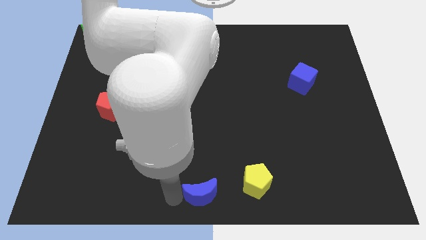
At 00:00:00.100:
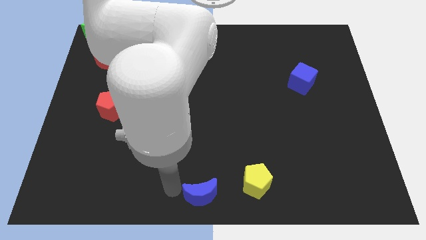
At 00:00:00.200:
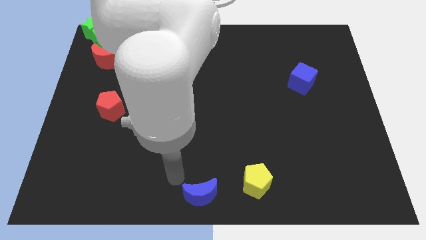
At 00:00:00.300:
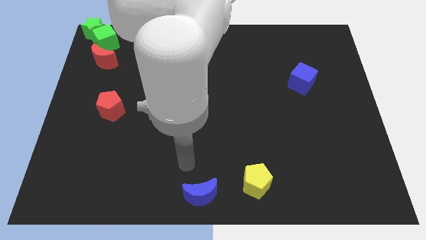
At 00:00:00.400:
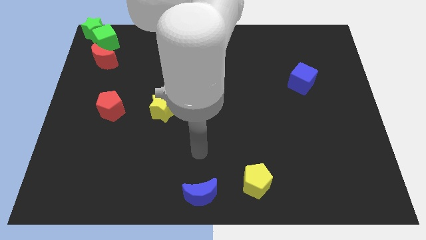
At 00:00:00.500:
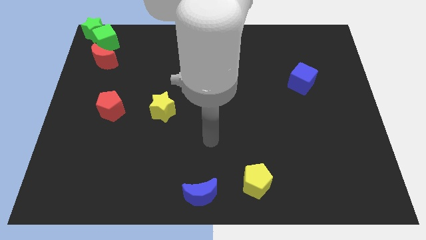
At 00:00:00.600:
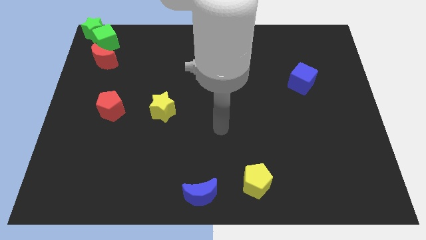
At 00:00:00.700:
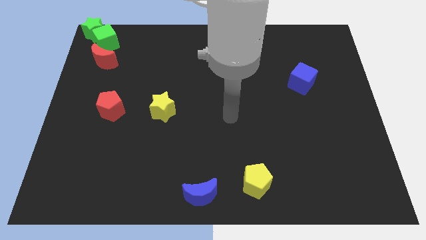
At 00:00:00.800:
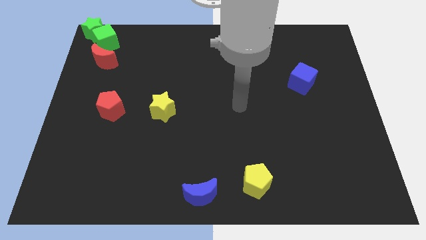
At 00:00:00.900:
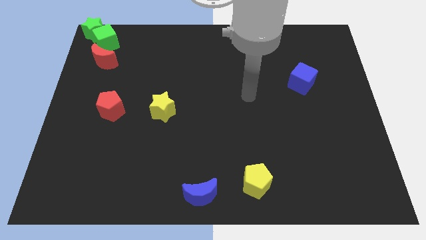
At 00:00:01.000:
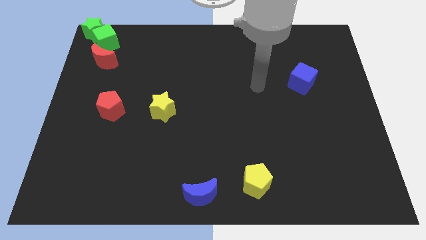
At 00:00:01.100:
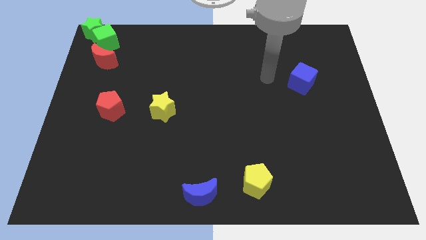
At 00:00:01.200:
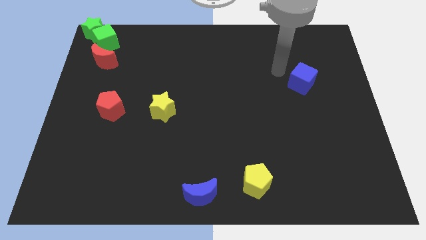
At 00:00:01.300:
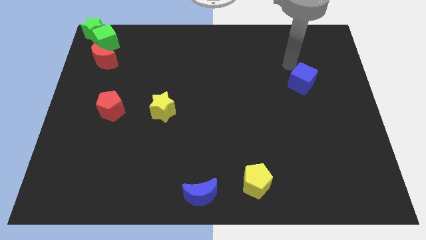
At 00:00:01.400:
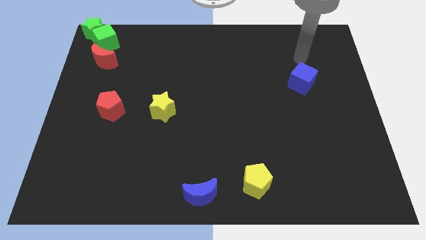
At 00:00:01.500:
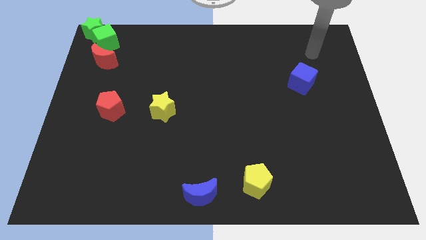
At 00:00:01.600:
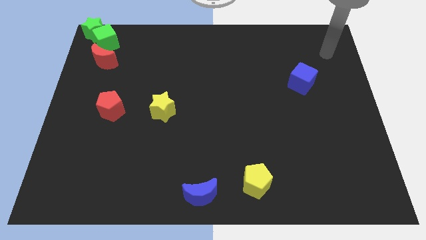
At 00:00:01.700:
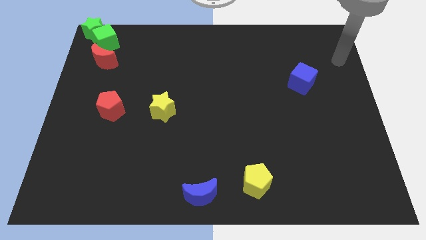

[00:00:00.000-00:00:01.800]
move your arm to the top right

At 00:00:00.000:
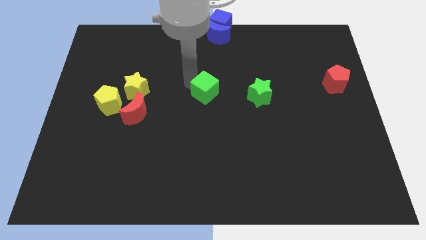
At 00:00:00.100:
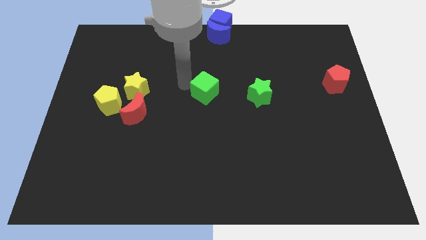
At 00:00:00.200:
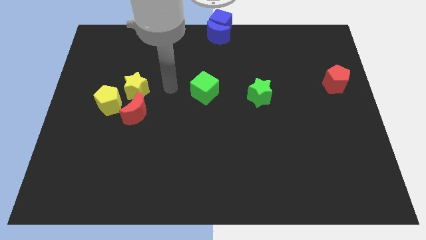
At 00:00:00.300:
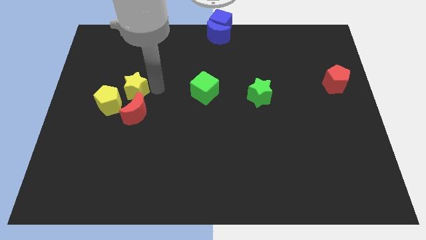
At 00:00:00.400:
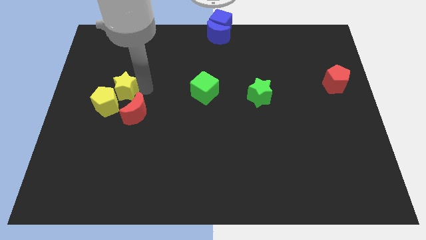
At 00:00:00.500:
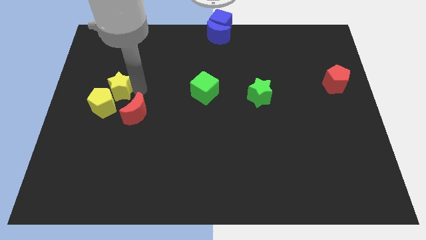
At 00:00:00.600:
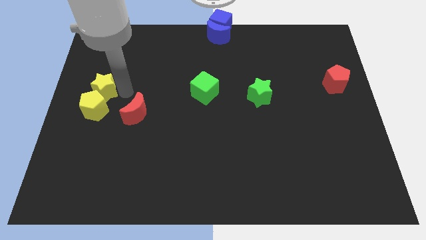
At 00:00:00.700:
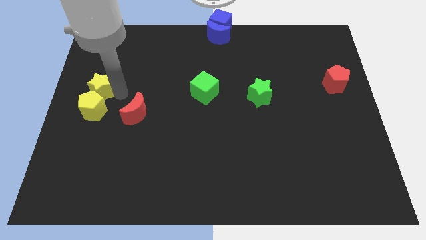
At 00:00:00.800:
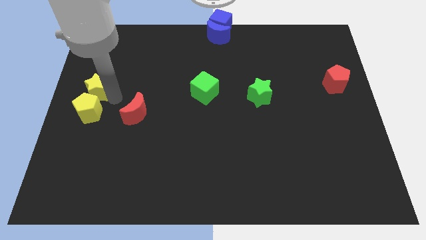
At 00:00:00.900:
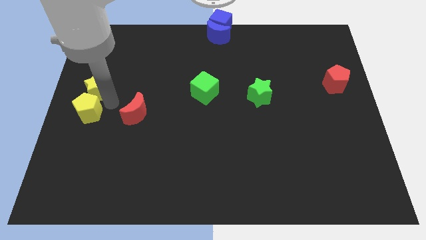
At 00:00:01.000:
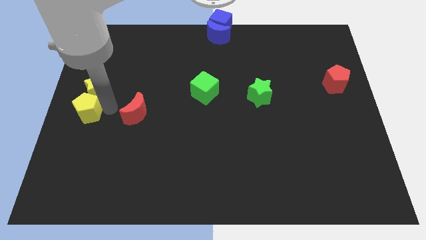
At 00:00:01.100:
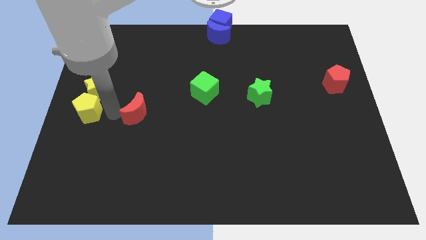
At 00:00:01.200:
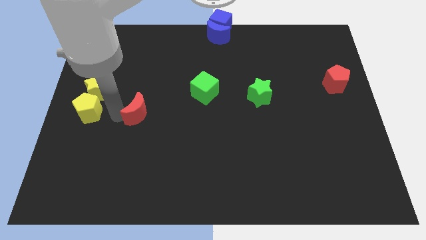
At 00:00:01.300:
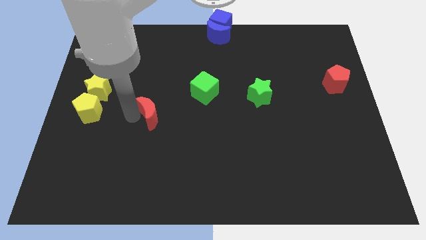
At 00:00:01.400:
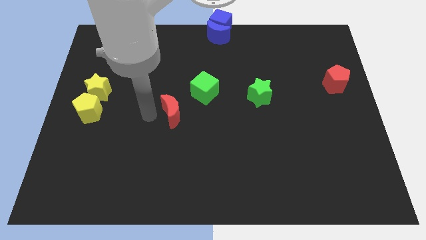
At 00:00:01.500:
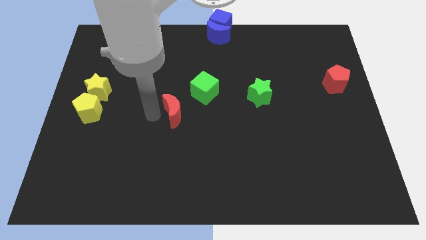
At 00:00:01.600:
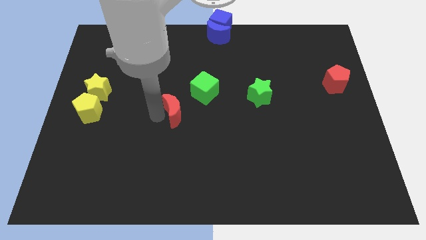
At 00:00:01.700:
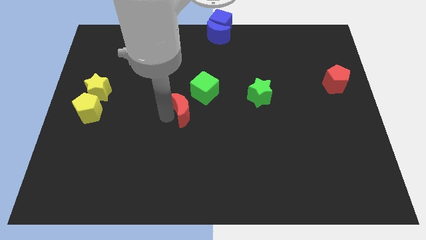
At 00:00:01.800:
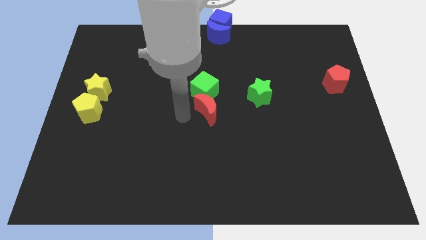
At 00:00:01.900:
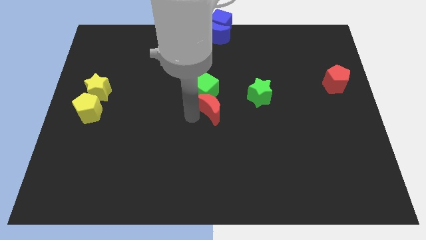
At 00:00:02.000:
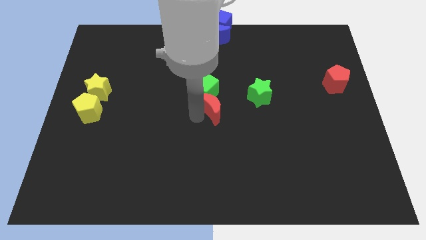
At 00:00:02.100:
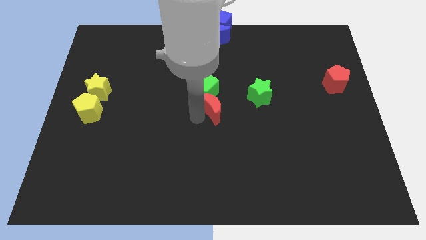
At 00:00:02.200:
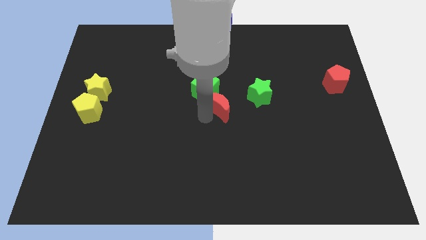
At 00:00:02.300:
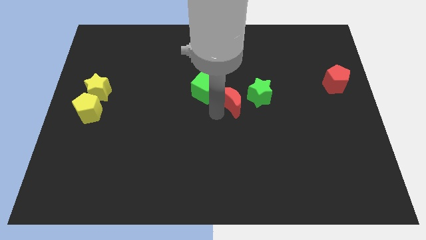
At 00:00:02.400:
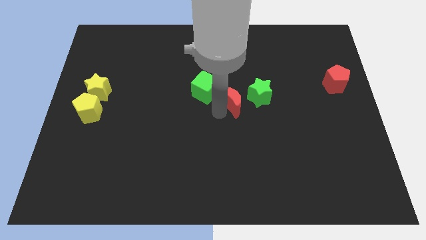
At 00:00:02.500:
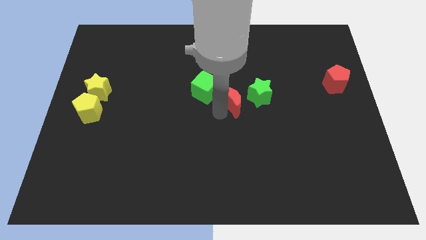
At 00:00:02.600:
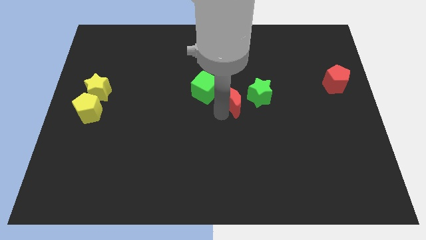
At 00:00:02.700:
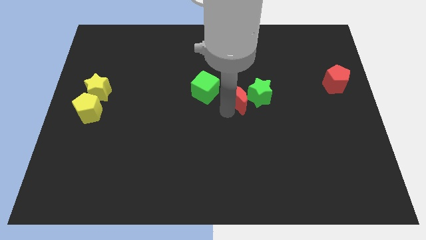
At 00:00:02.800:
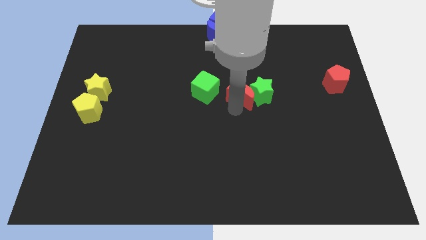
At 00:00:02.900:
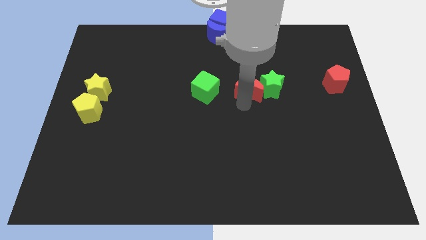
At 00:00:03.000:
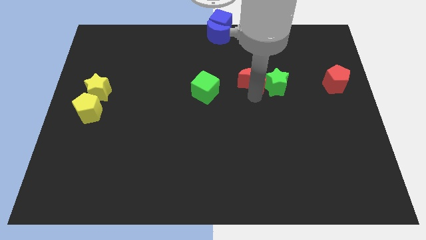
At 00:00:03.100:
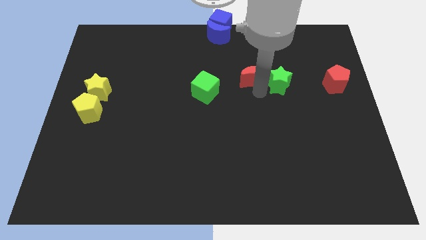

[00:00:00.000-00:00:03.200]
separate yellow blocks and the red moon

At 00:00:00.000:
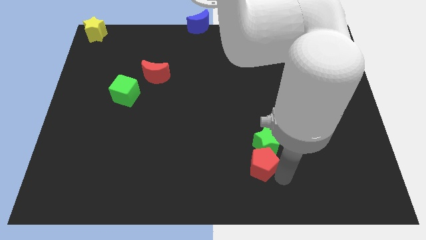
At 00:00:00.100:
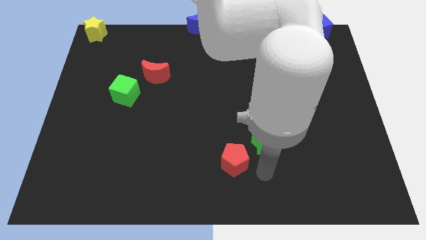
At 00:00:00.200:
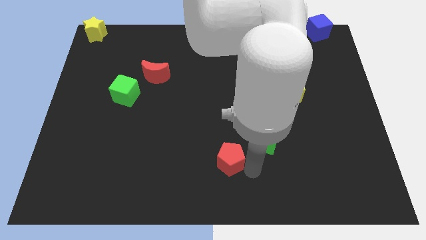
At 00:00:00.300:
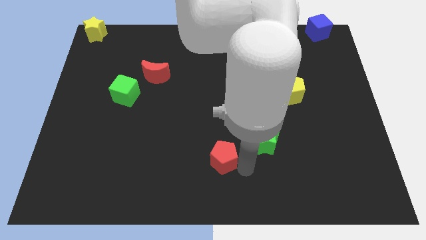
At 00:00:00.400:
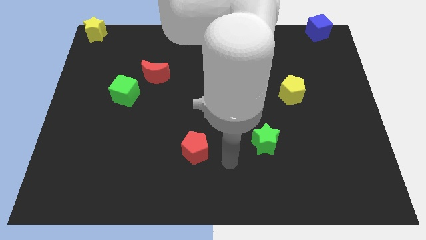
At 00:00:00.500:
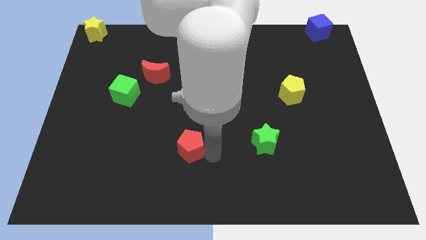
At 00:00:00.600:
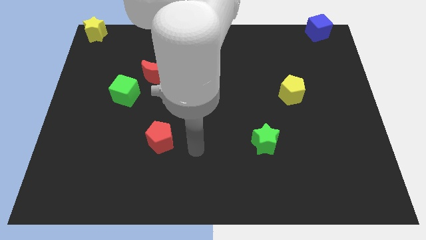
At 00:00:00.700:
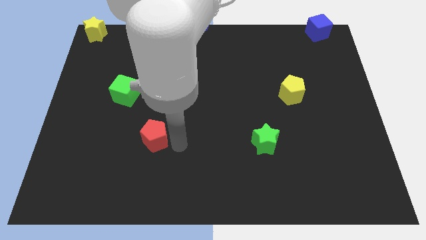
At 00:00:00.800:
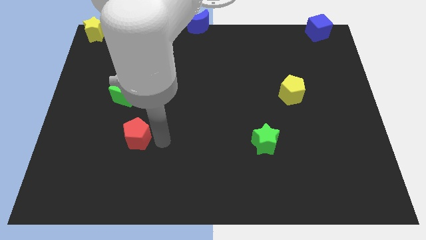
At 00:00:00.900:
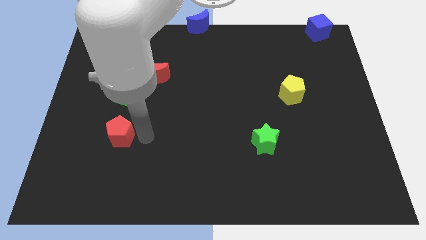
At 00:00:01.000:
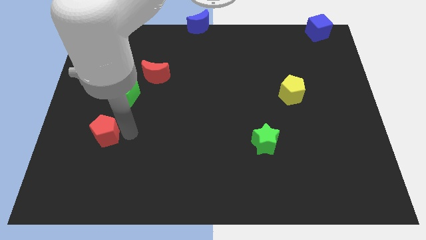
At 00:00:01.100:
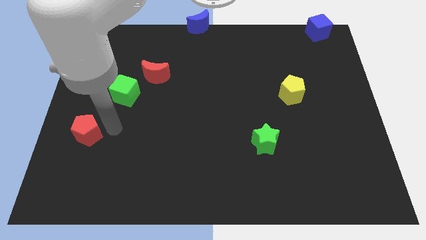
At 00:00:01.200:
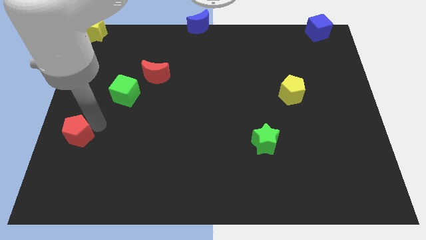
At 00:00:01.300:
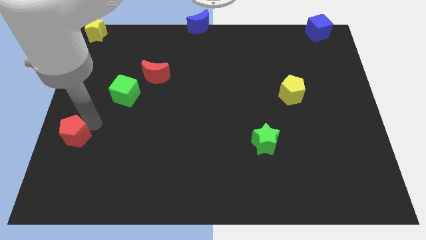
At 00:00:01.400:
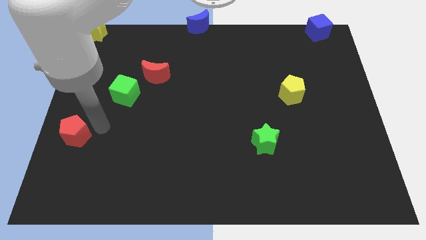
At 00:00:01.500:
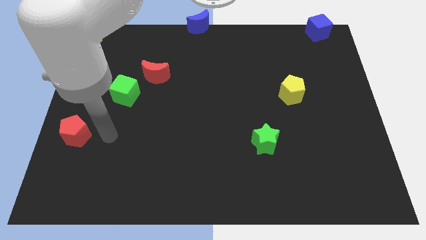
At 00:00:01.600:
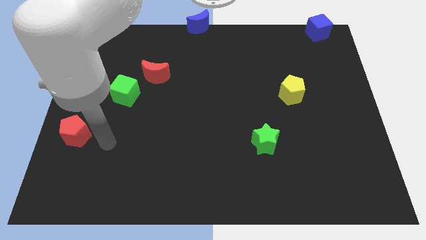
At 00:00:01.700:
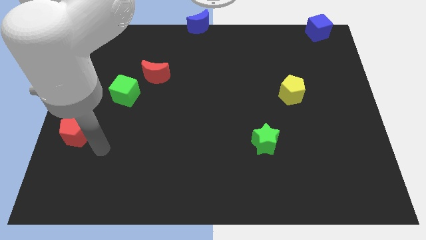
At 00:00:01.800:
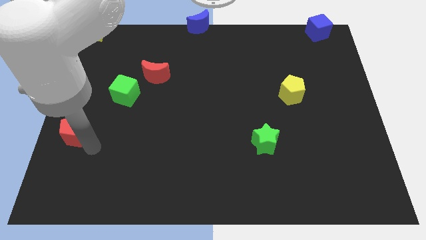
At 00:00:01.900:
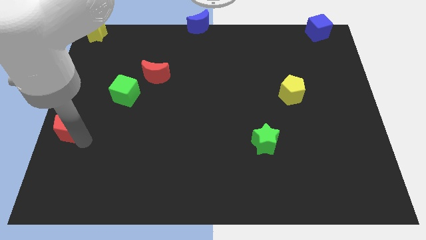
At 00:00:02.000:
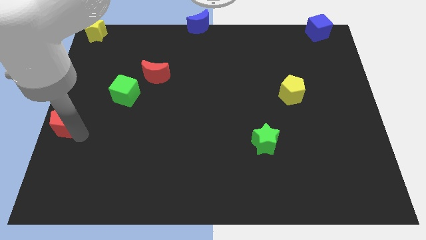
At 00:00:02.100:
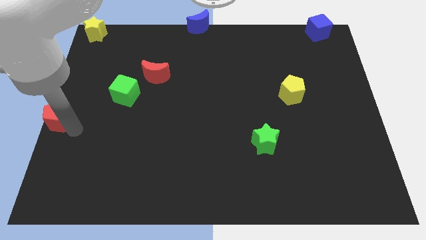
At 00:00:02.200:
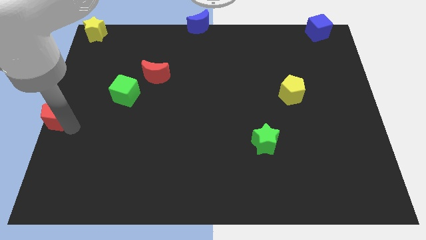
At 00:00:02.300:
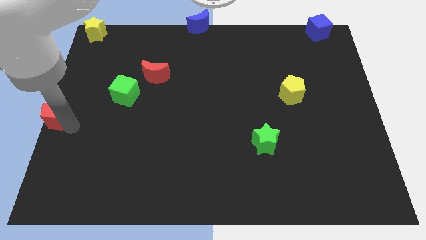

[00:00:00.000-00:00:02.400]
move the red pentagon to the middle left of the board

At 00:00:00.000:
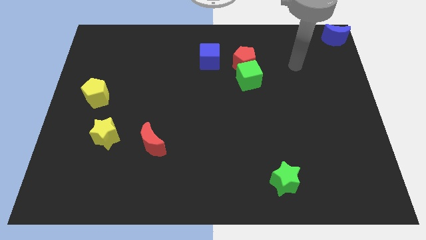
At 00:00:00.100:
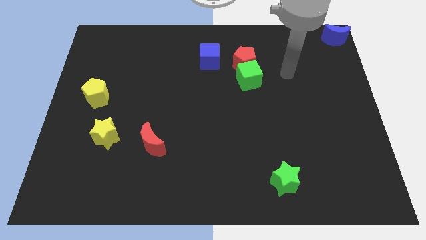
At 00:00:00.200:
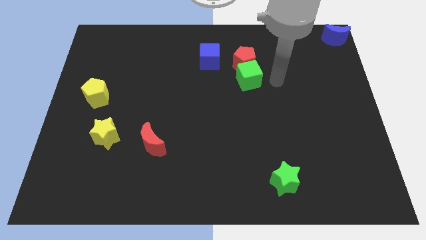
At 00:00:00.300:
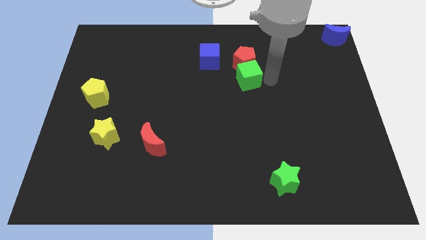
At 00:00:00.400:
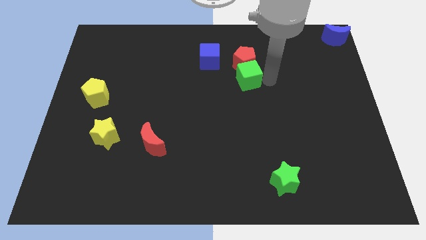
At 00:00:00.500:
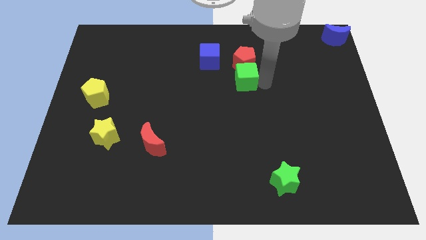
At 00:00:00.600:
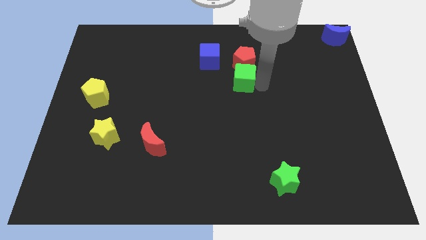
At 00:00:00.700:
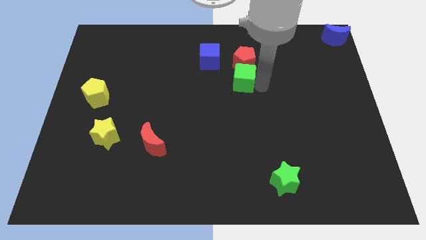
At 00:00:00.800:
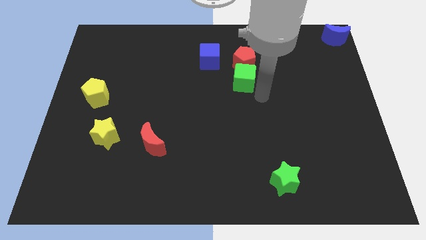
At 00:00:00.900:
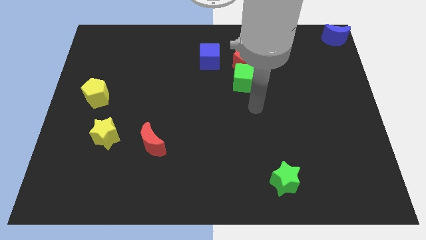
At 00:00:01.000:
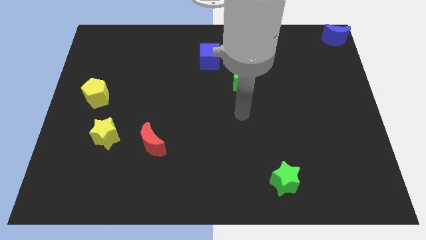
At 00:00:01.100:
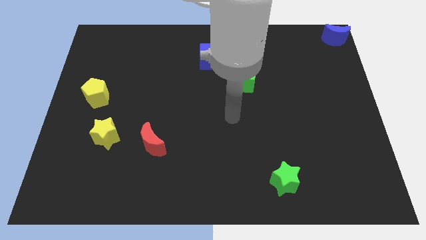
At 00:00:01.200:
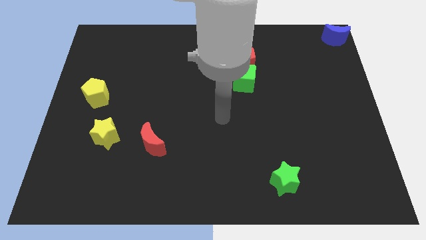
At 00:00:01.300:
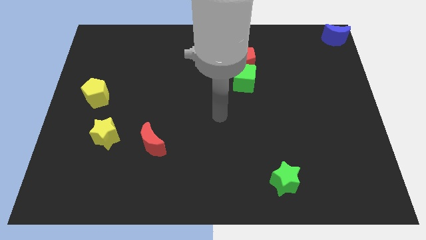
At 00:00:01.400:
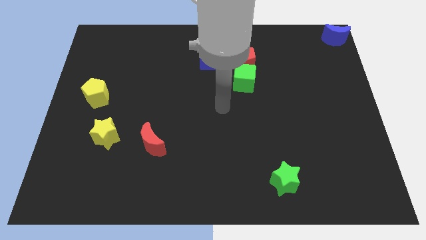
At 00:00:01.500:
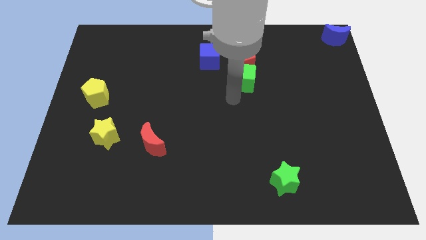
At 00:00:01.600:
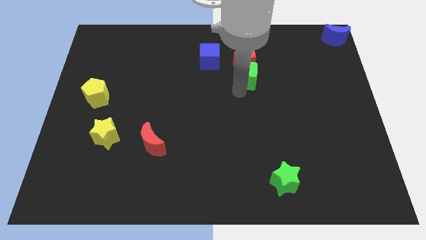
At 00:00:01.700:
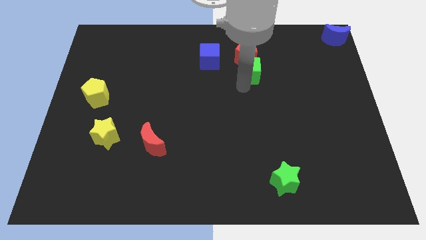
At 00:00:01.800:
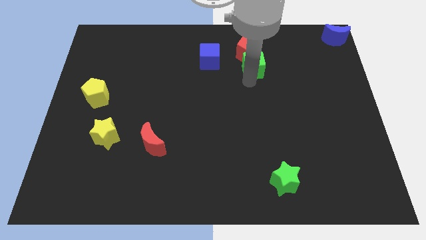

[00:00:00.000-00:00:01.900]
slightly touch your arm to the green cube
